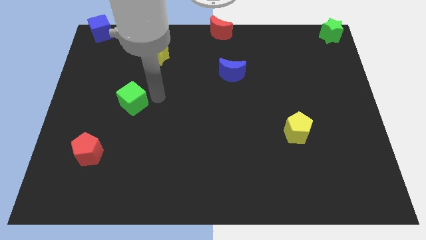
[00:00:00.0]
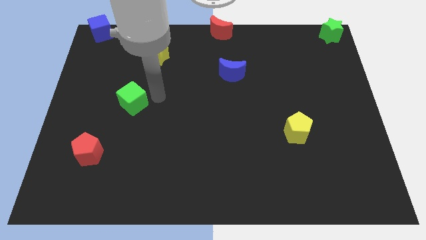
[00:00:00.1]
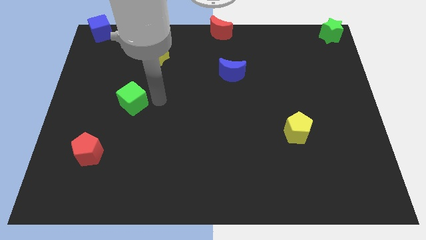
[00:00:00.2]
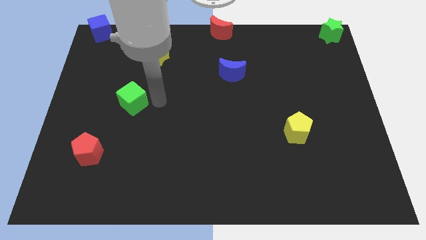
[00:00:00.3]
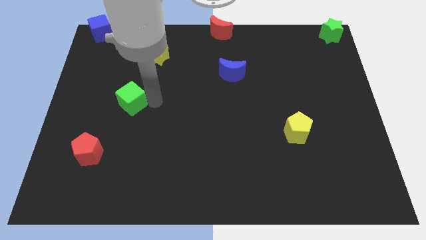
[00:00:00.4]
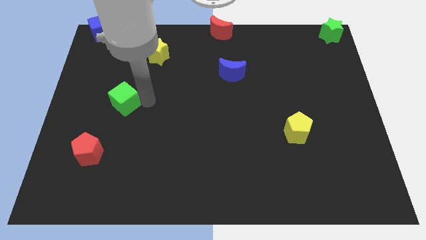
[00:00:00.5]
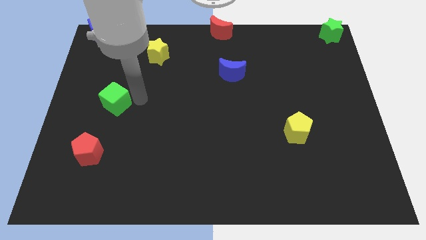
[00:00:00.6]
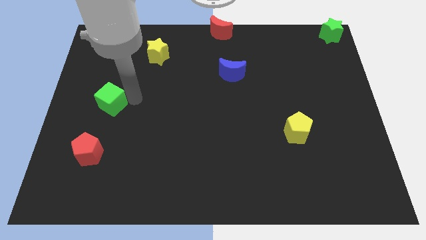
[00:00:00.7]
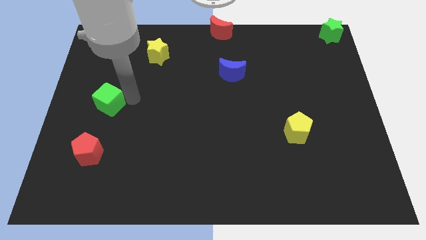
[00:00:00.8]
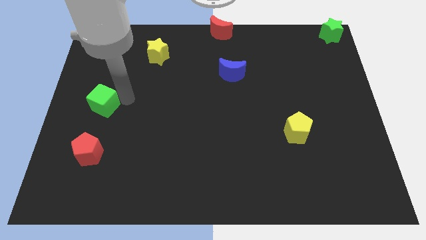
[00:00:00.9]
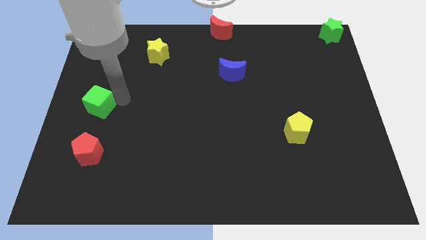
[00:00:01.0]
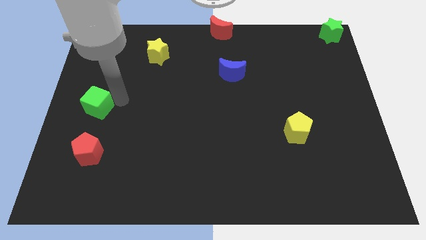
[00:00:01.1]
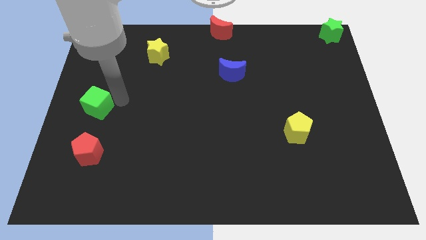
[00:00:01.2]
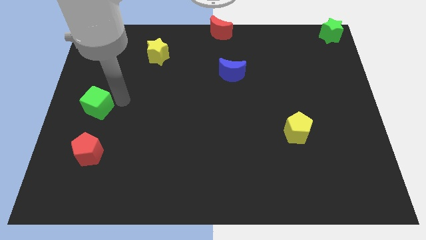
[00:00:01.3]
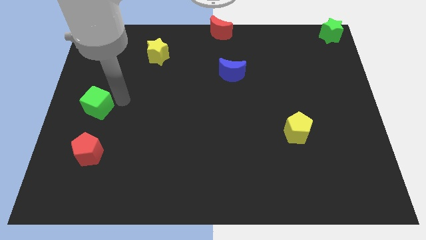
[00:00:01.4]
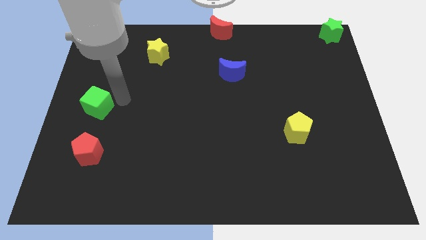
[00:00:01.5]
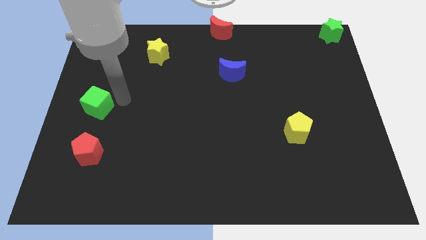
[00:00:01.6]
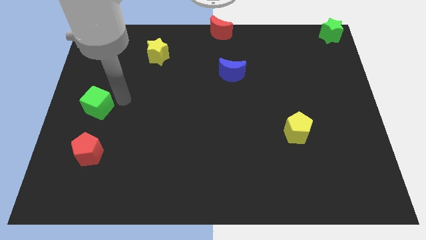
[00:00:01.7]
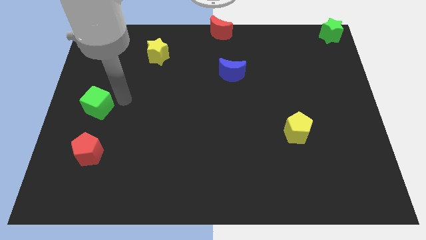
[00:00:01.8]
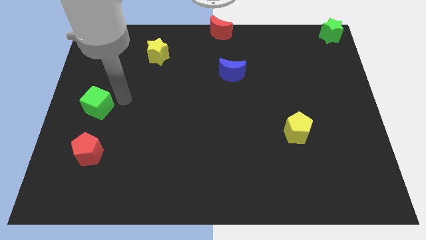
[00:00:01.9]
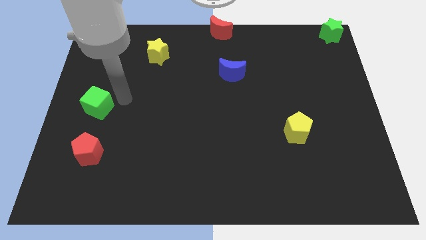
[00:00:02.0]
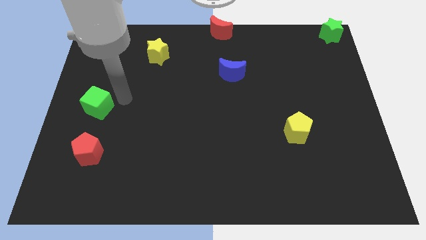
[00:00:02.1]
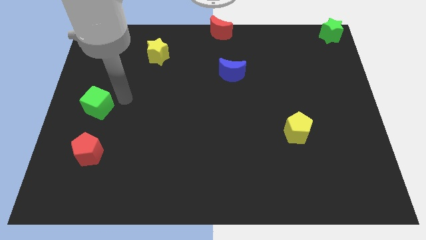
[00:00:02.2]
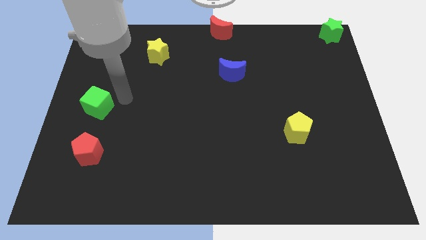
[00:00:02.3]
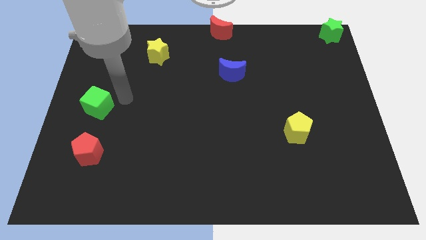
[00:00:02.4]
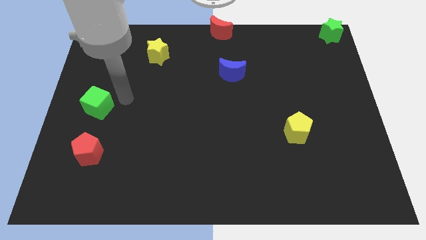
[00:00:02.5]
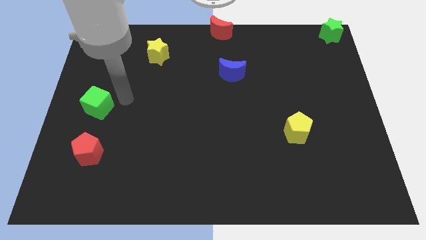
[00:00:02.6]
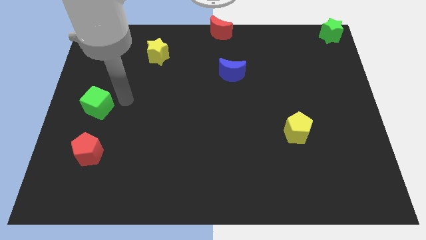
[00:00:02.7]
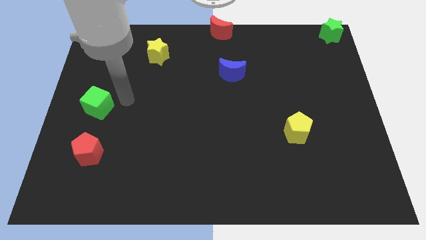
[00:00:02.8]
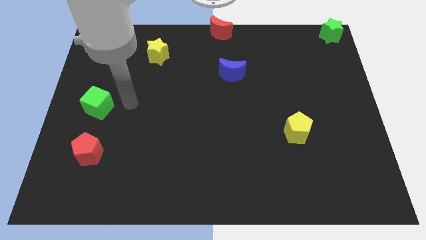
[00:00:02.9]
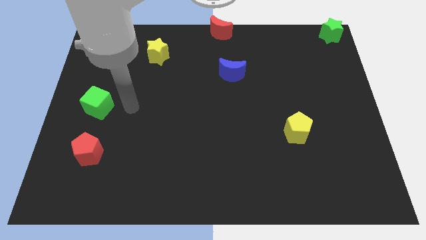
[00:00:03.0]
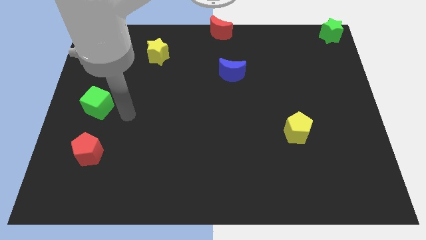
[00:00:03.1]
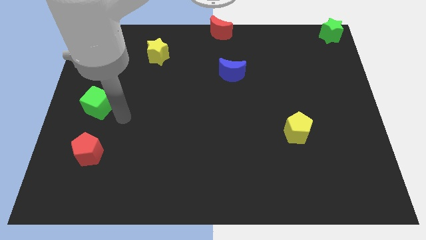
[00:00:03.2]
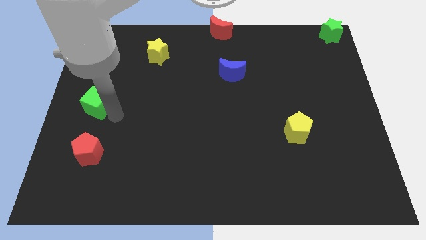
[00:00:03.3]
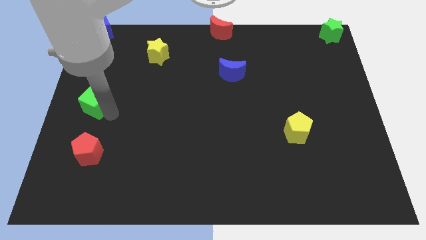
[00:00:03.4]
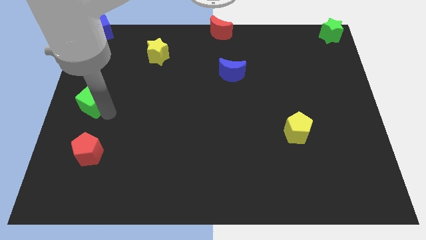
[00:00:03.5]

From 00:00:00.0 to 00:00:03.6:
place the green cube above to the red pentagon

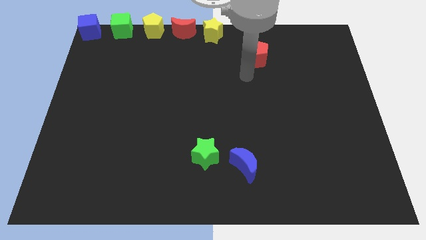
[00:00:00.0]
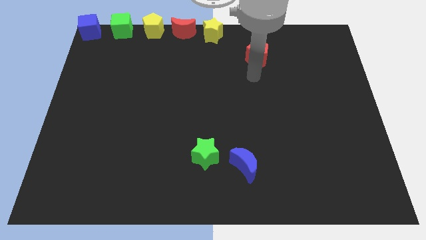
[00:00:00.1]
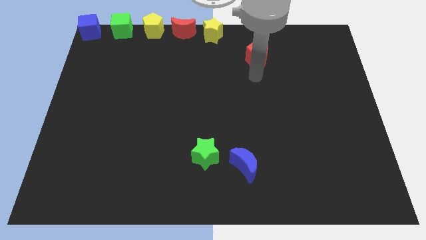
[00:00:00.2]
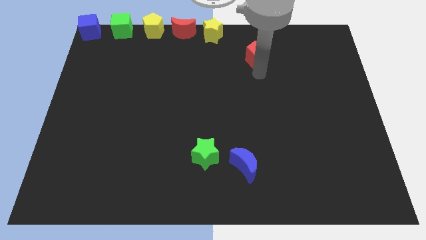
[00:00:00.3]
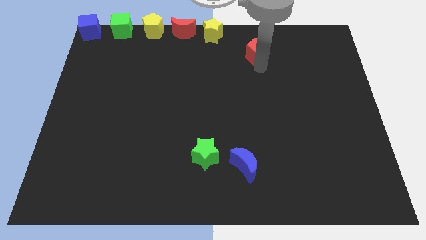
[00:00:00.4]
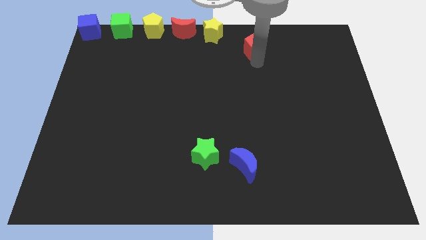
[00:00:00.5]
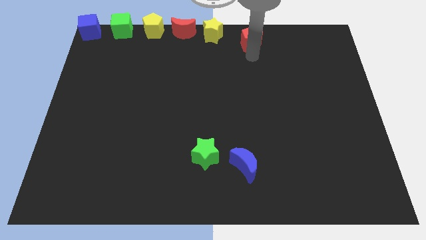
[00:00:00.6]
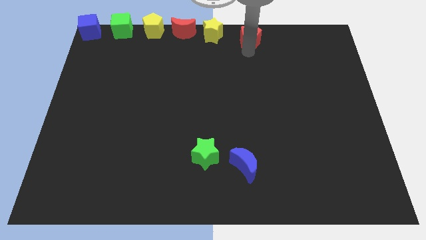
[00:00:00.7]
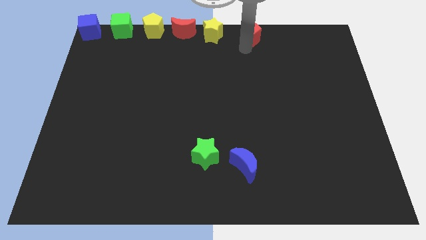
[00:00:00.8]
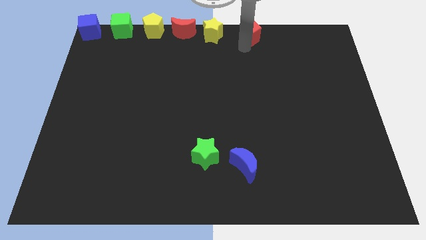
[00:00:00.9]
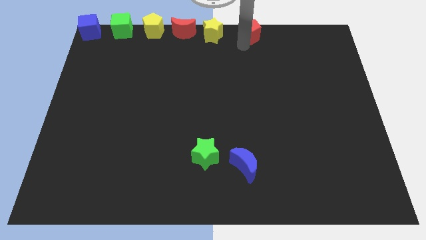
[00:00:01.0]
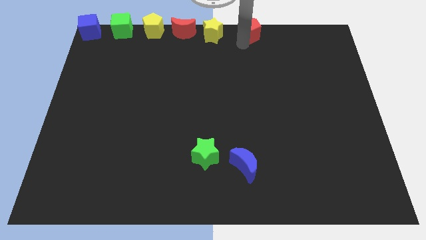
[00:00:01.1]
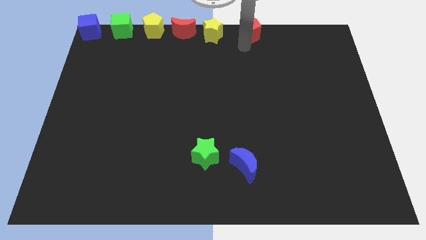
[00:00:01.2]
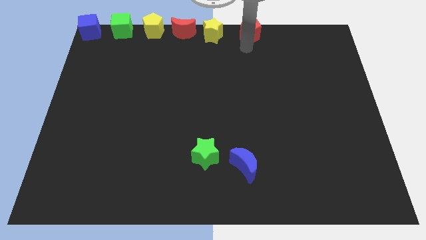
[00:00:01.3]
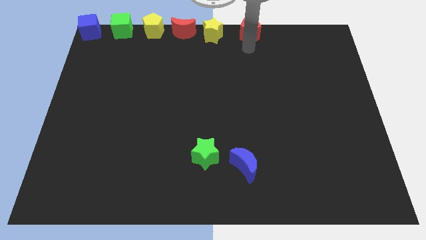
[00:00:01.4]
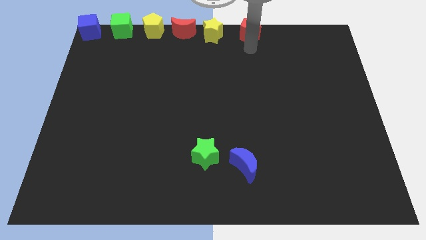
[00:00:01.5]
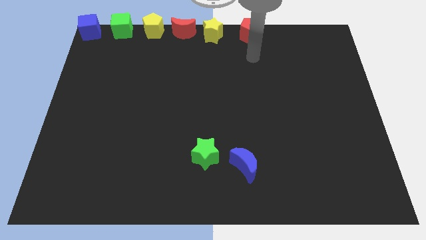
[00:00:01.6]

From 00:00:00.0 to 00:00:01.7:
move the red pentagon right to the yellow star

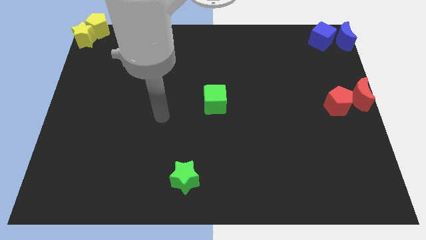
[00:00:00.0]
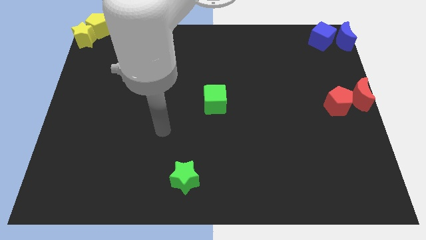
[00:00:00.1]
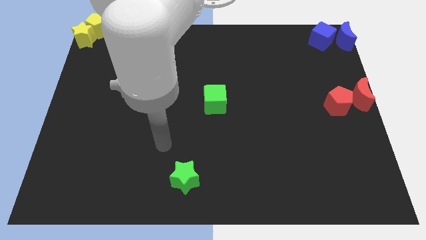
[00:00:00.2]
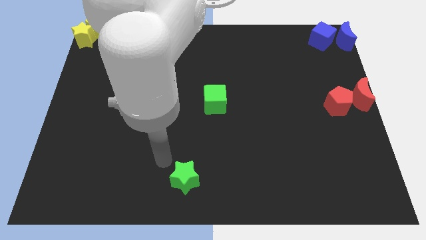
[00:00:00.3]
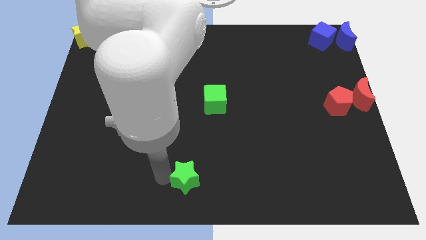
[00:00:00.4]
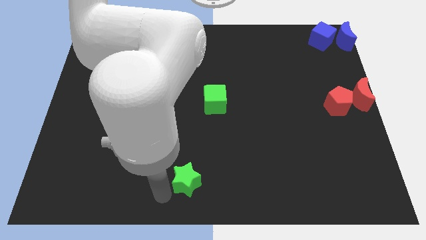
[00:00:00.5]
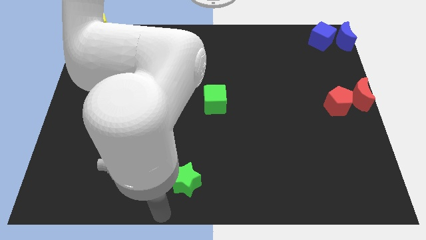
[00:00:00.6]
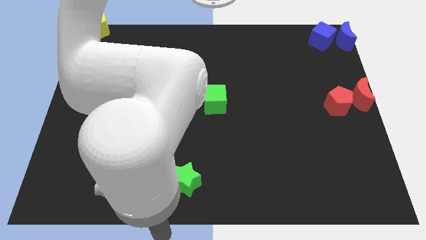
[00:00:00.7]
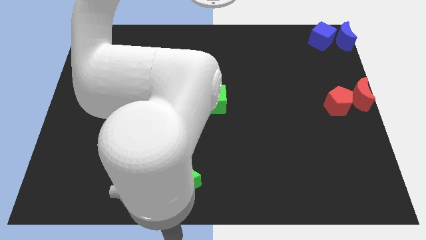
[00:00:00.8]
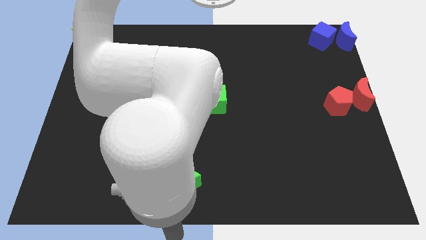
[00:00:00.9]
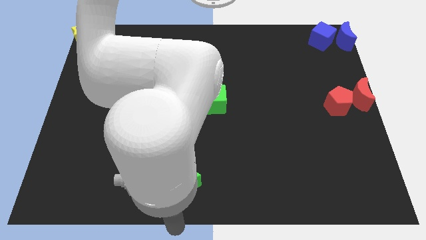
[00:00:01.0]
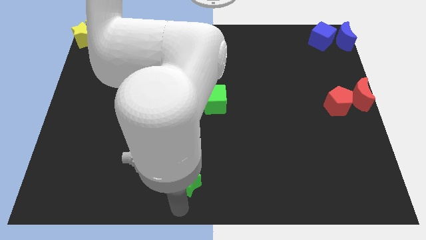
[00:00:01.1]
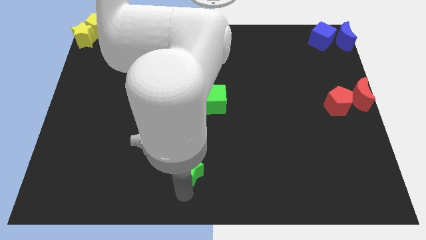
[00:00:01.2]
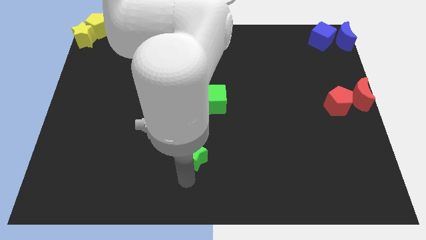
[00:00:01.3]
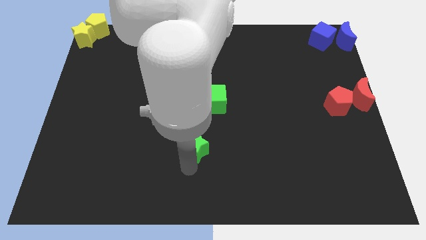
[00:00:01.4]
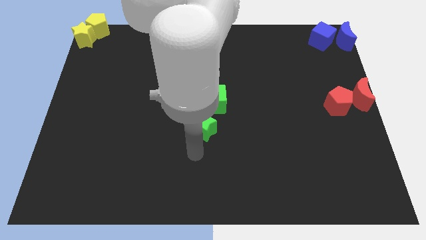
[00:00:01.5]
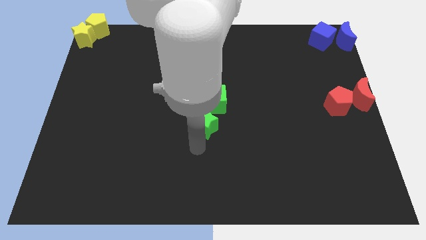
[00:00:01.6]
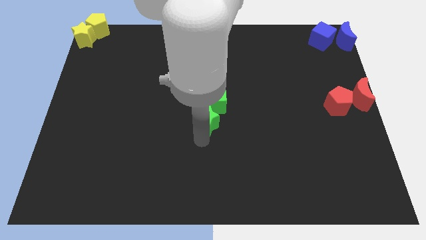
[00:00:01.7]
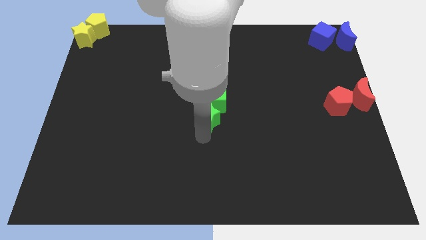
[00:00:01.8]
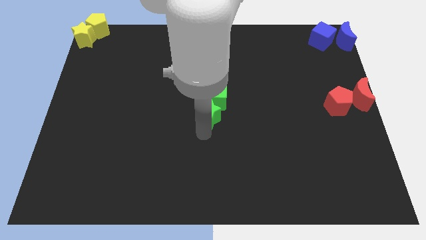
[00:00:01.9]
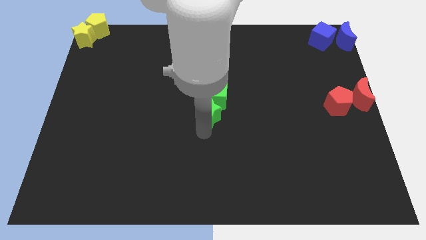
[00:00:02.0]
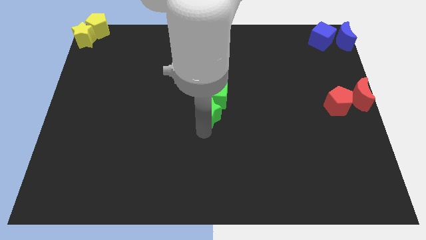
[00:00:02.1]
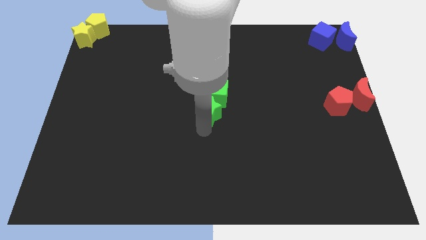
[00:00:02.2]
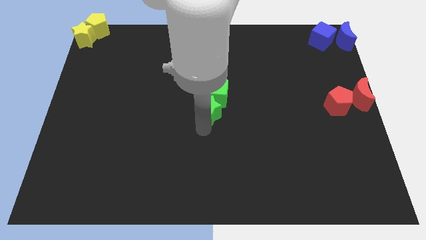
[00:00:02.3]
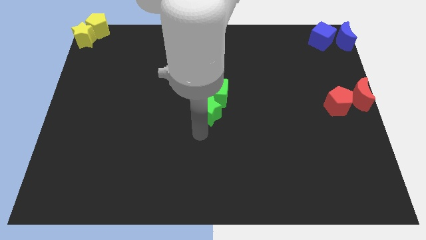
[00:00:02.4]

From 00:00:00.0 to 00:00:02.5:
move the green star to the center

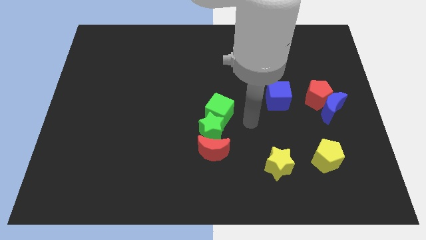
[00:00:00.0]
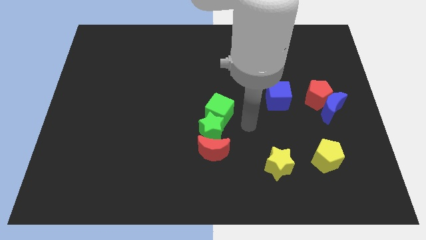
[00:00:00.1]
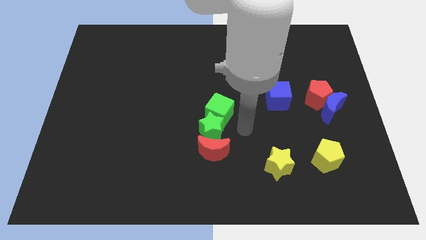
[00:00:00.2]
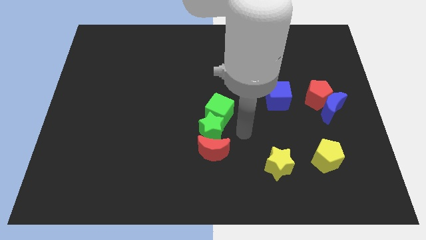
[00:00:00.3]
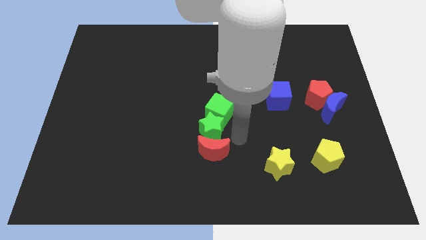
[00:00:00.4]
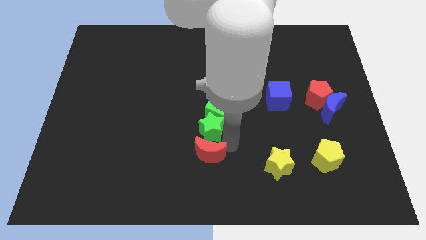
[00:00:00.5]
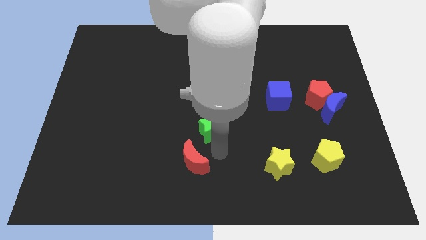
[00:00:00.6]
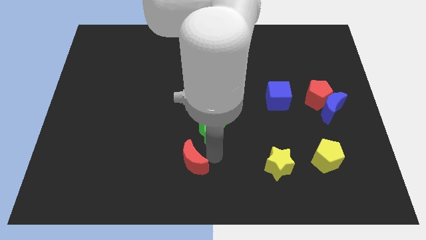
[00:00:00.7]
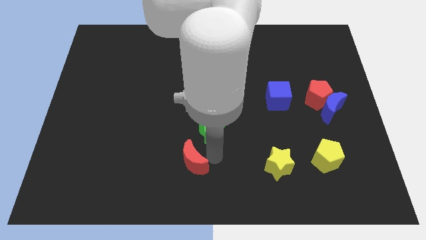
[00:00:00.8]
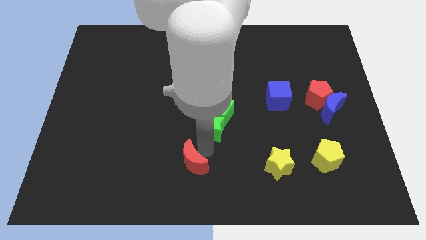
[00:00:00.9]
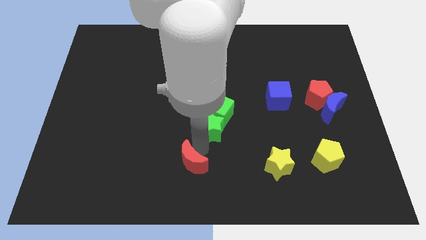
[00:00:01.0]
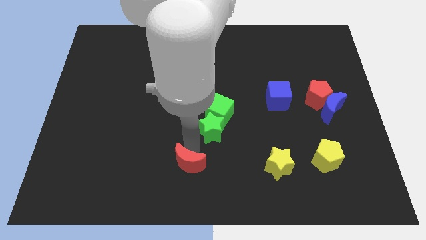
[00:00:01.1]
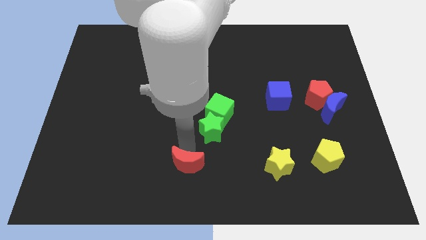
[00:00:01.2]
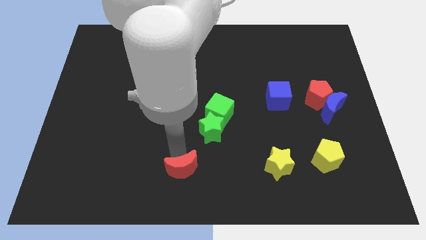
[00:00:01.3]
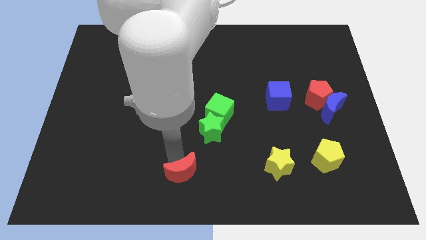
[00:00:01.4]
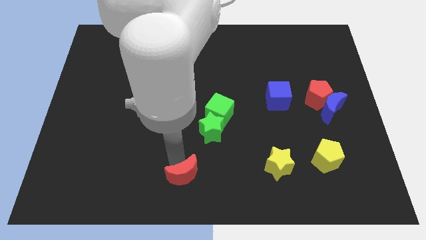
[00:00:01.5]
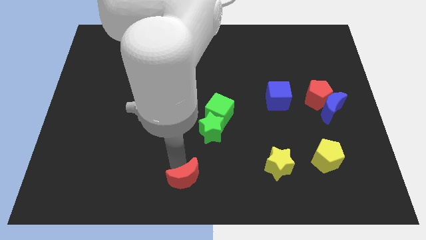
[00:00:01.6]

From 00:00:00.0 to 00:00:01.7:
separate the red crescent and the green blocks
